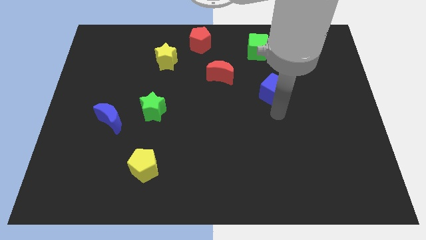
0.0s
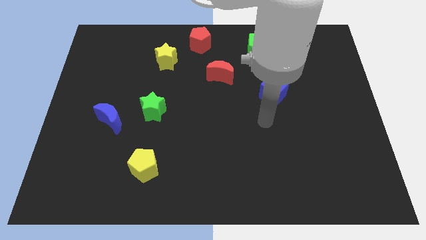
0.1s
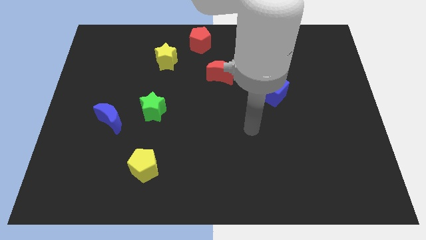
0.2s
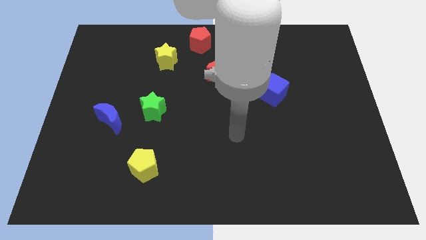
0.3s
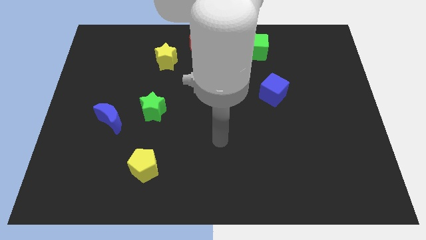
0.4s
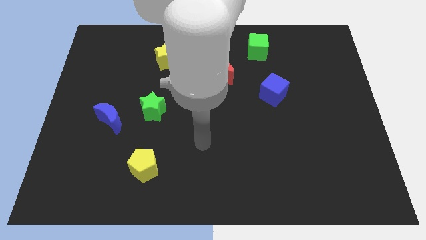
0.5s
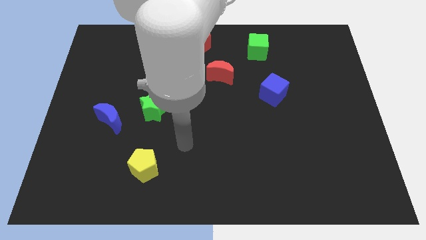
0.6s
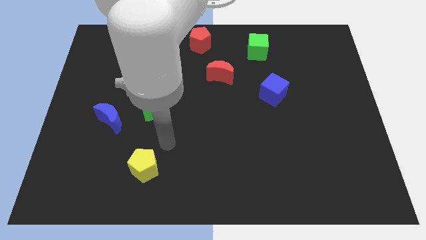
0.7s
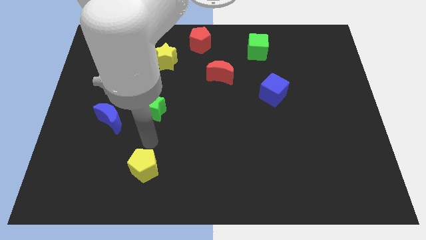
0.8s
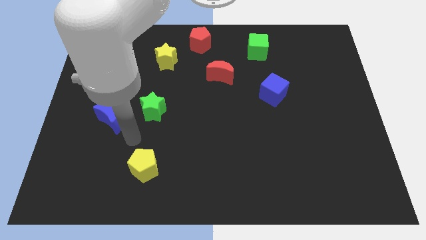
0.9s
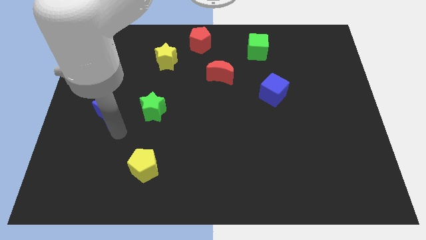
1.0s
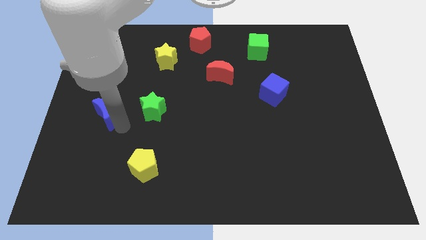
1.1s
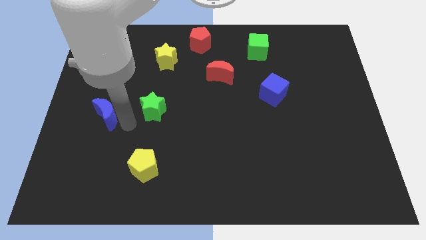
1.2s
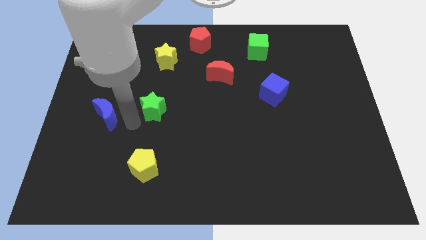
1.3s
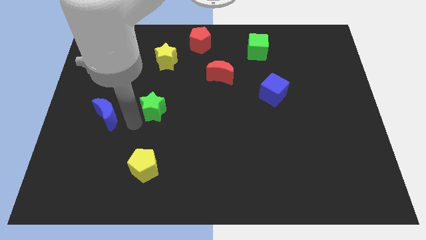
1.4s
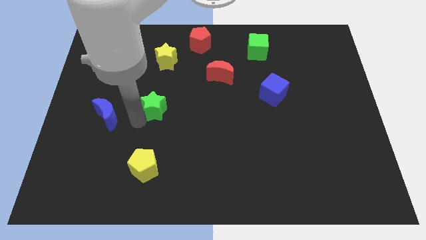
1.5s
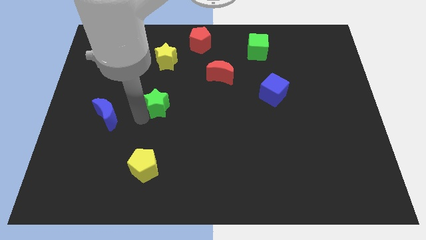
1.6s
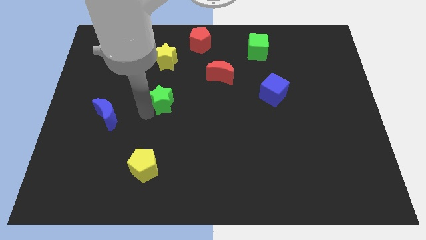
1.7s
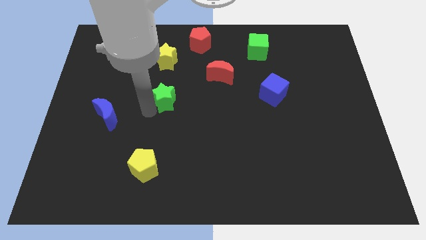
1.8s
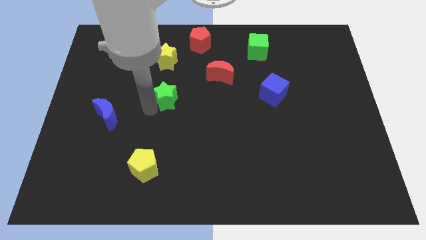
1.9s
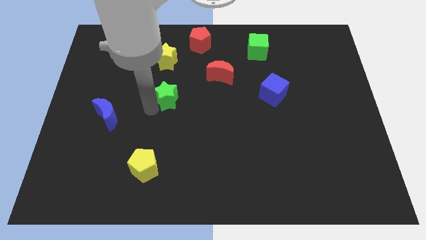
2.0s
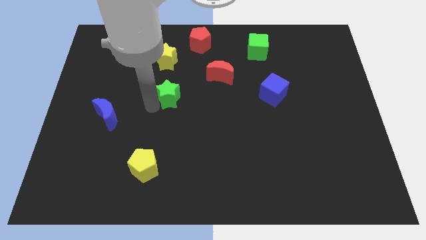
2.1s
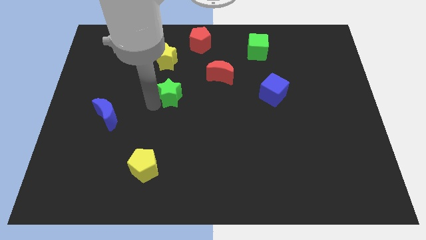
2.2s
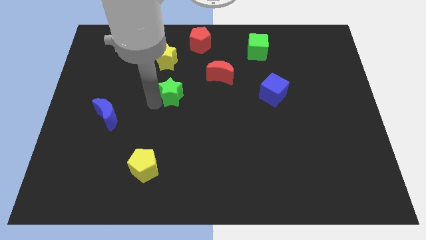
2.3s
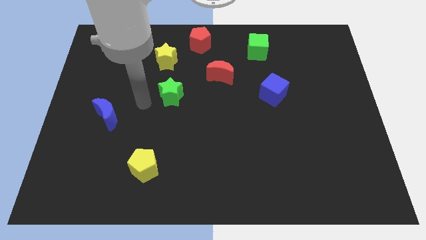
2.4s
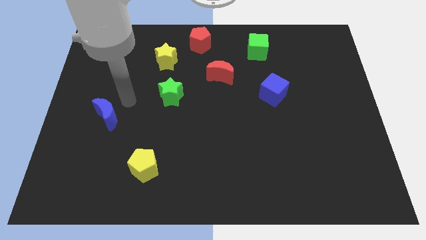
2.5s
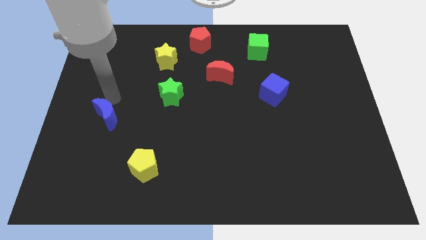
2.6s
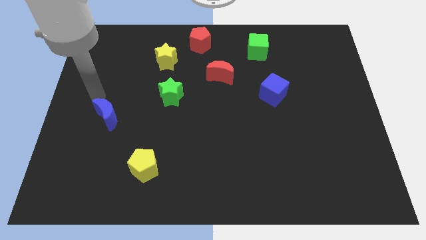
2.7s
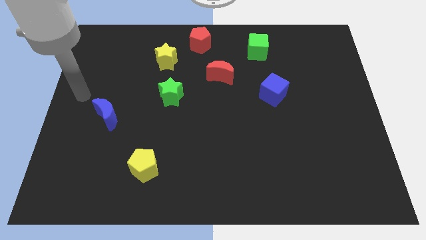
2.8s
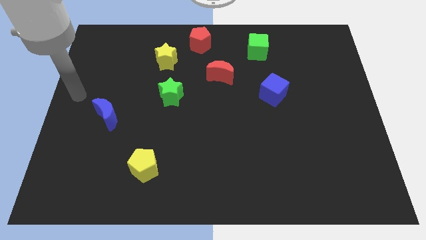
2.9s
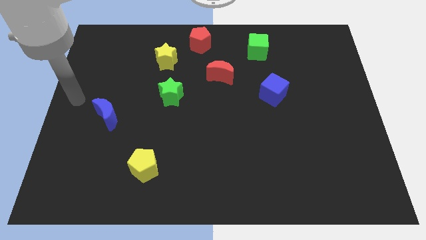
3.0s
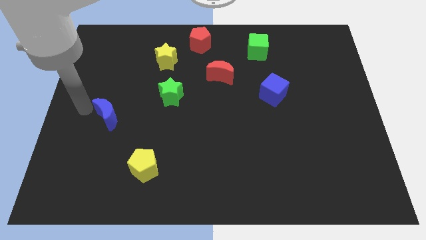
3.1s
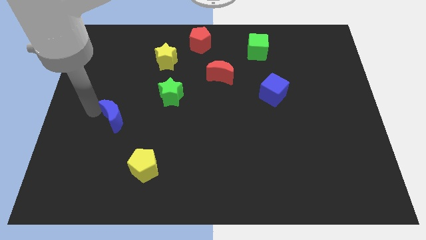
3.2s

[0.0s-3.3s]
place the green star to the bottom of the yellow star

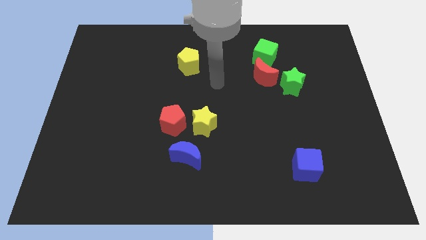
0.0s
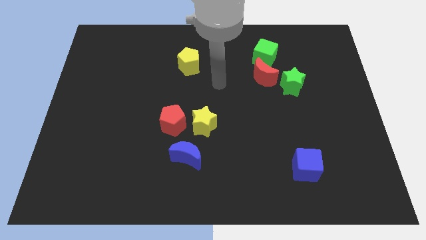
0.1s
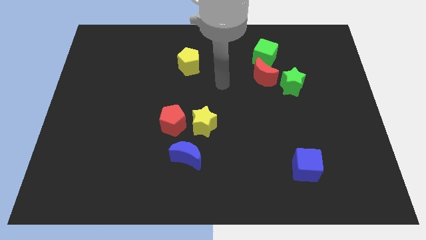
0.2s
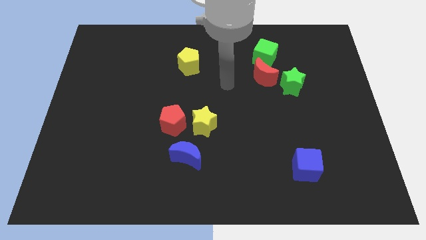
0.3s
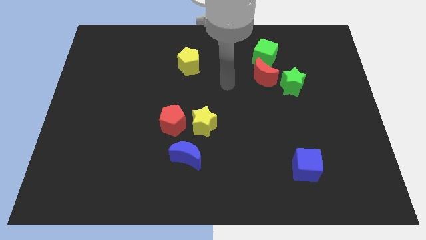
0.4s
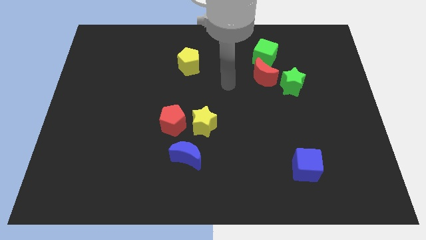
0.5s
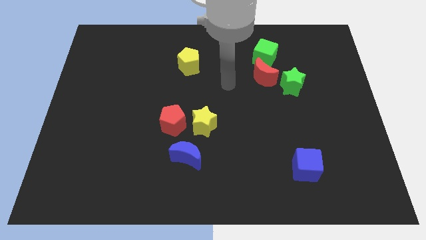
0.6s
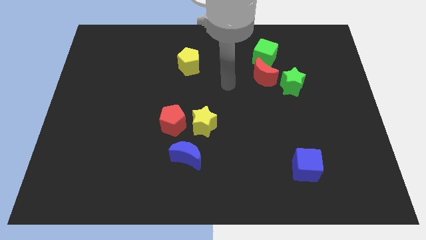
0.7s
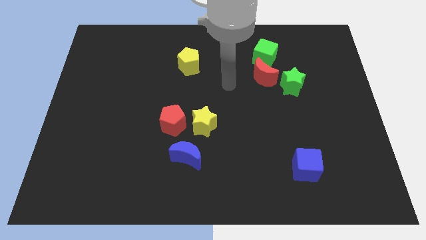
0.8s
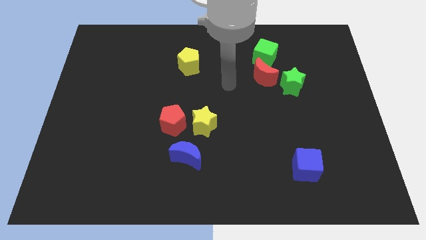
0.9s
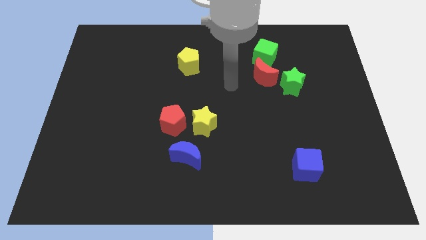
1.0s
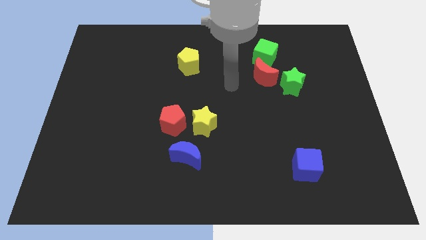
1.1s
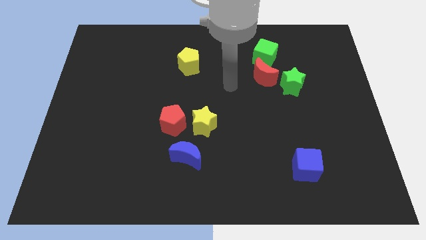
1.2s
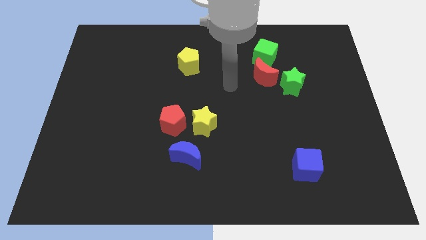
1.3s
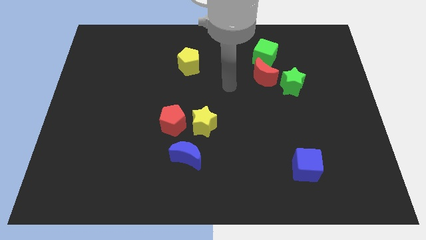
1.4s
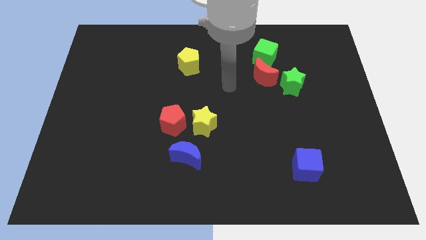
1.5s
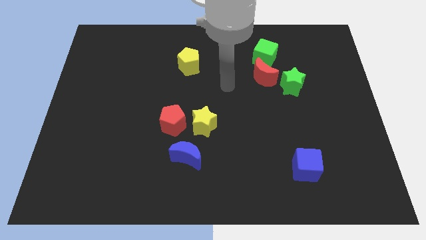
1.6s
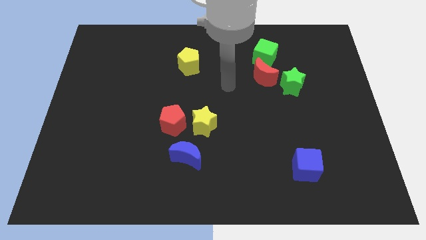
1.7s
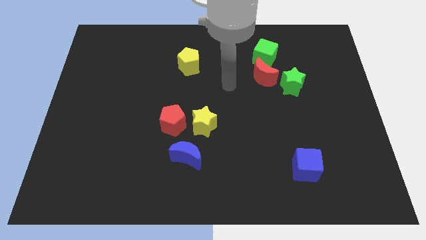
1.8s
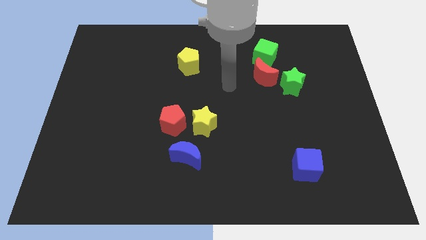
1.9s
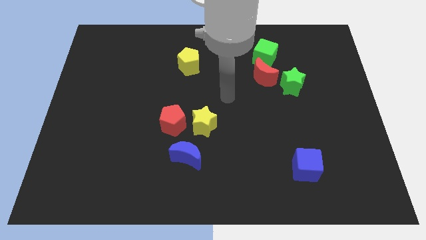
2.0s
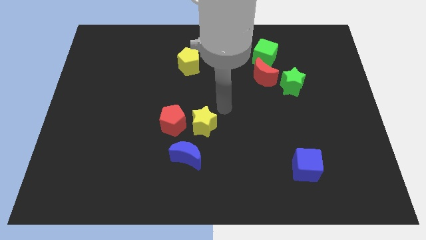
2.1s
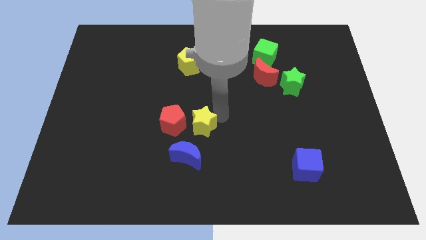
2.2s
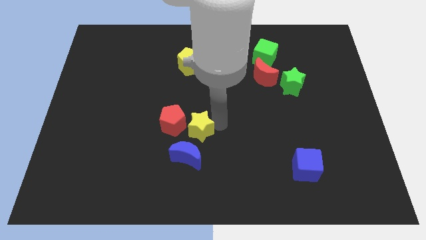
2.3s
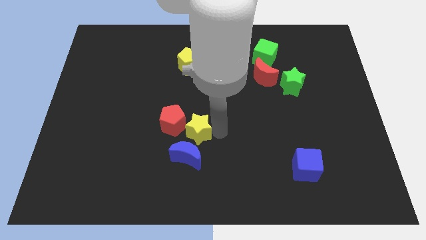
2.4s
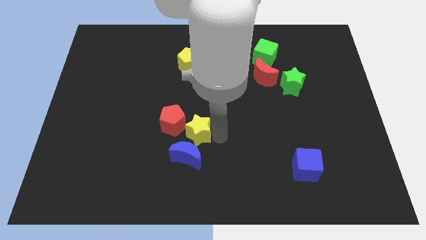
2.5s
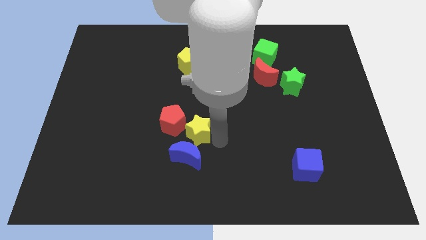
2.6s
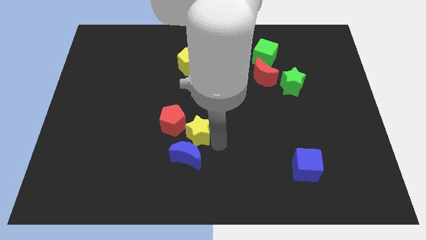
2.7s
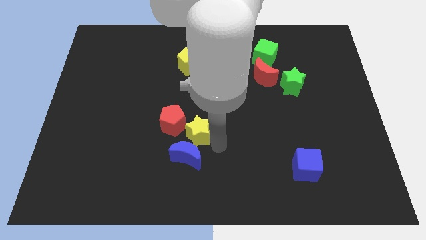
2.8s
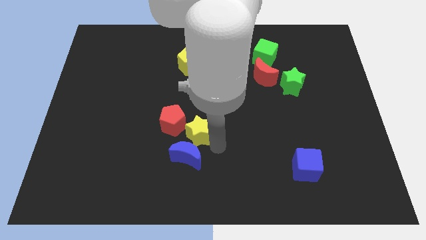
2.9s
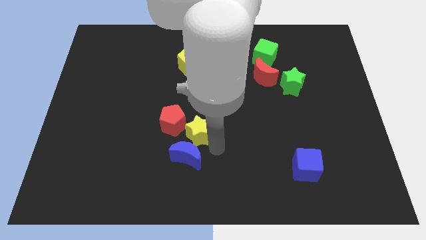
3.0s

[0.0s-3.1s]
add yellow star on top right of blue moon

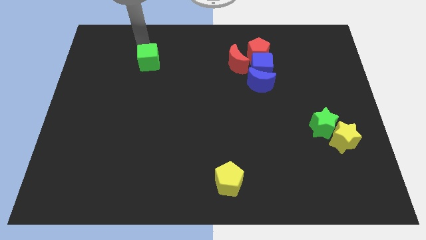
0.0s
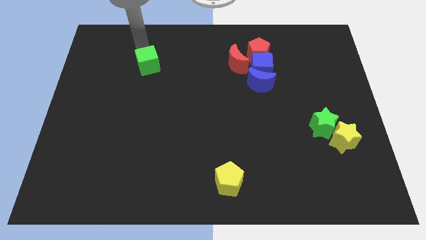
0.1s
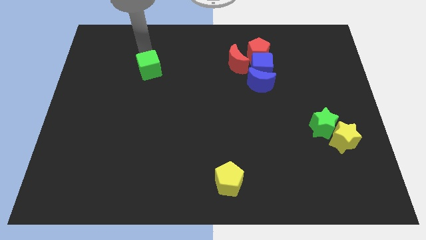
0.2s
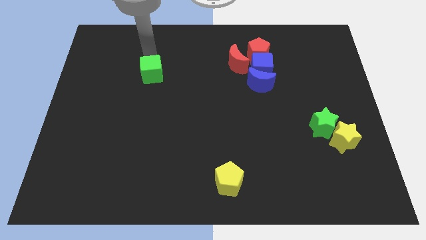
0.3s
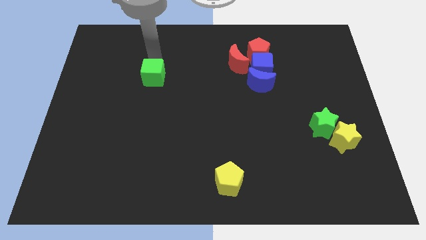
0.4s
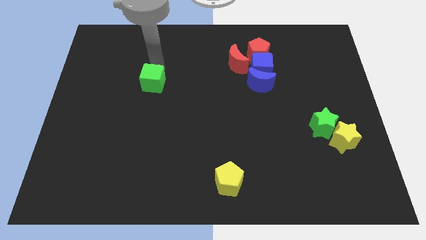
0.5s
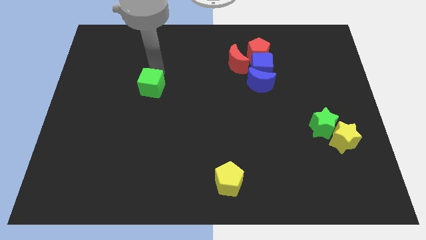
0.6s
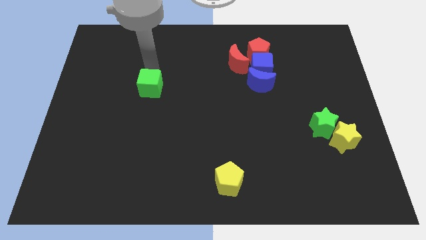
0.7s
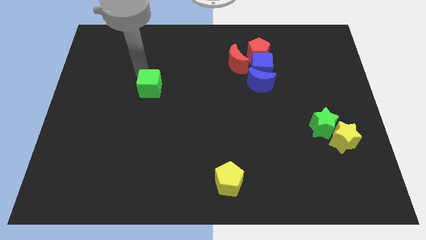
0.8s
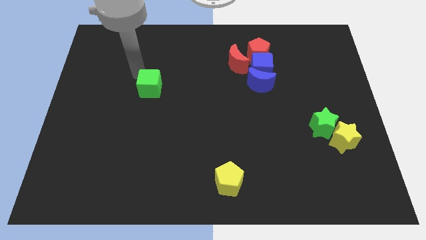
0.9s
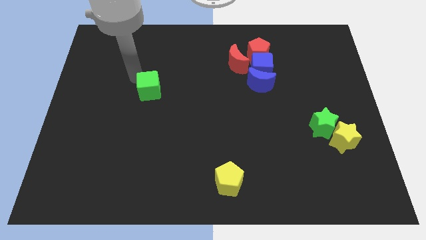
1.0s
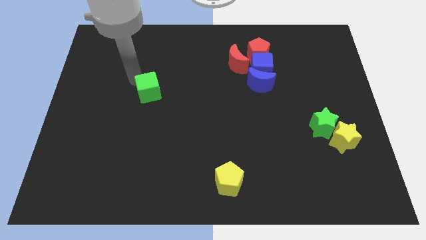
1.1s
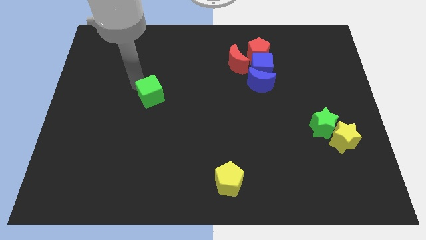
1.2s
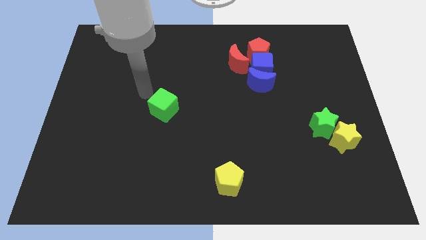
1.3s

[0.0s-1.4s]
move the green cube slightly to the bottom side

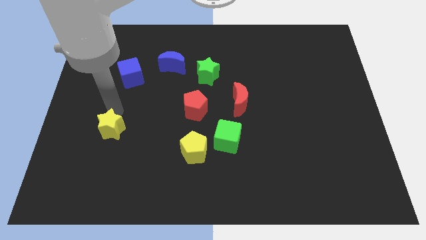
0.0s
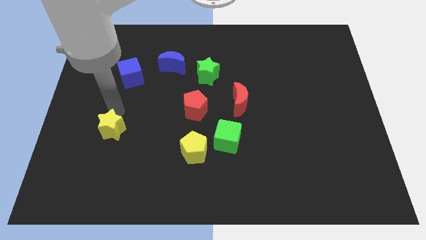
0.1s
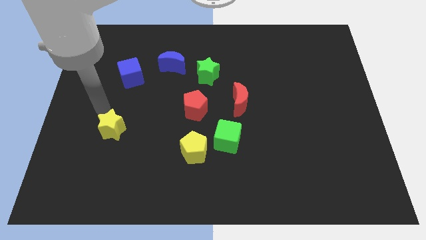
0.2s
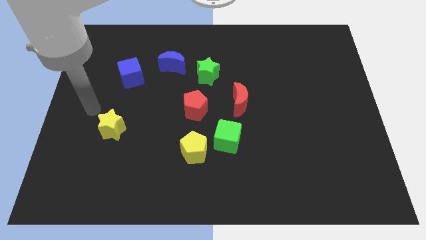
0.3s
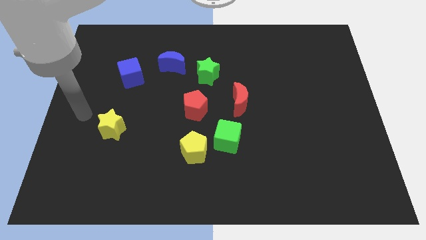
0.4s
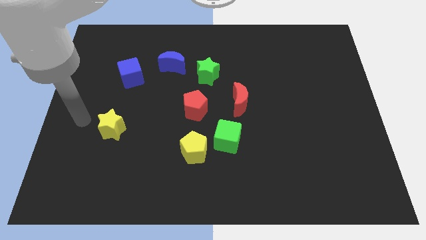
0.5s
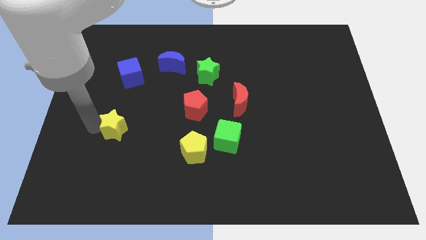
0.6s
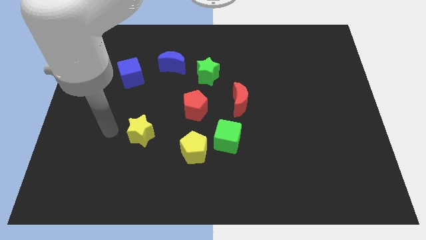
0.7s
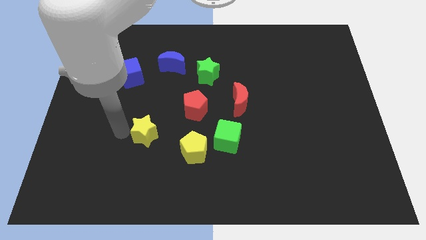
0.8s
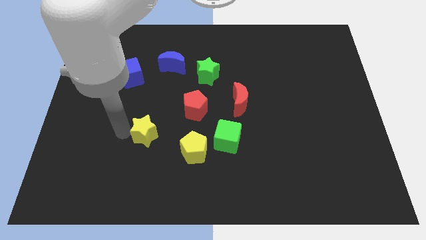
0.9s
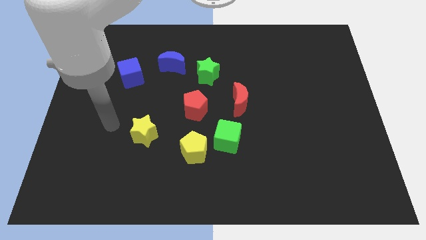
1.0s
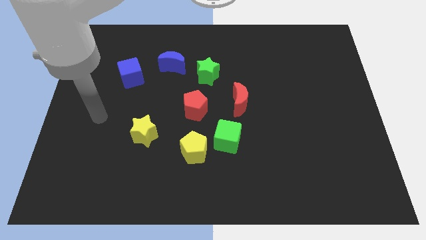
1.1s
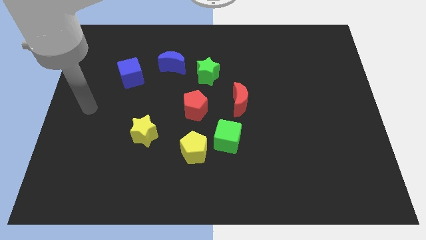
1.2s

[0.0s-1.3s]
push the yellow star slightly to the right of the board
